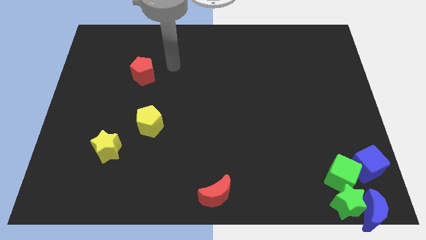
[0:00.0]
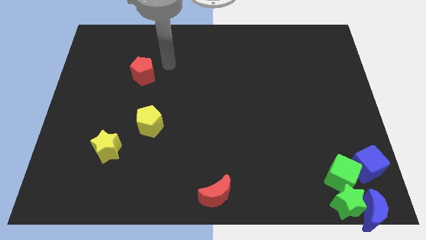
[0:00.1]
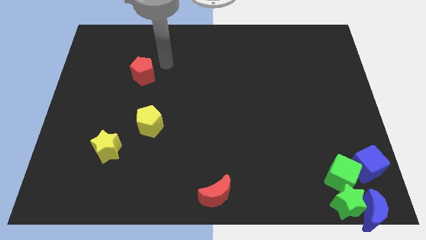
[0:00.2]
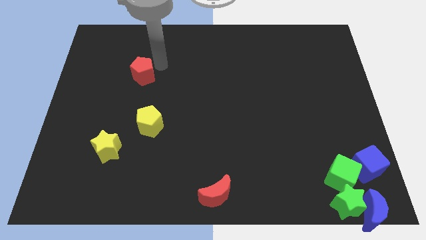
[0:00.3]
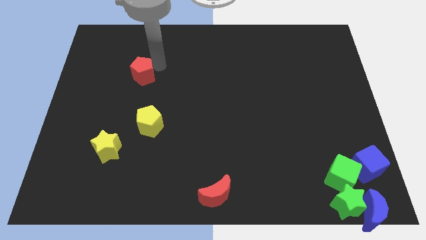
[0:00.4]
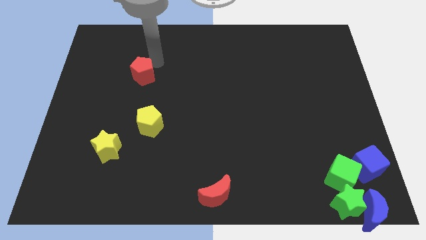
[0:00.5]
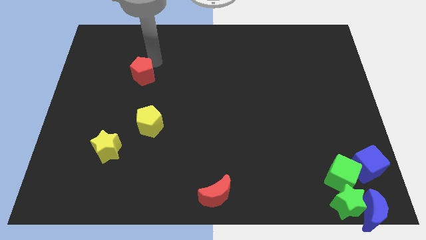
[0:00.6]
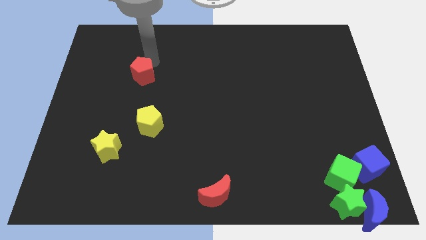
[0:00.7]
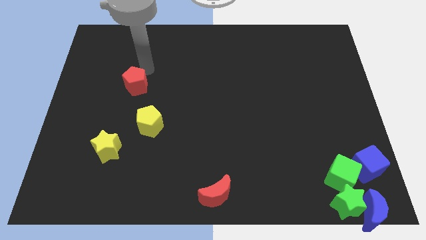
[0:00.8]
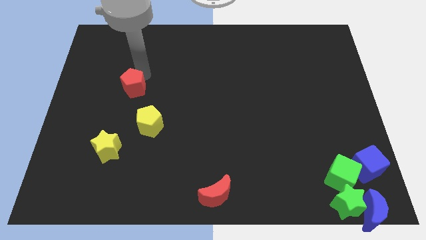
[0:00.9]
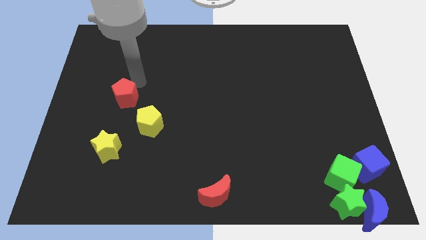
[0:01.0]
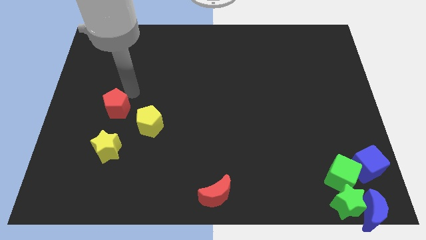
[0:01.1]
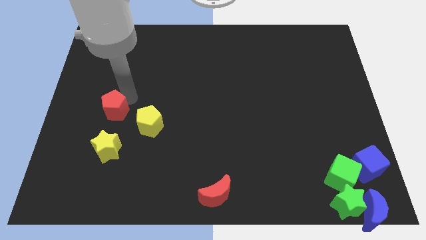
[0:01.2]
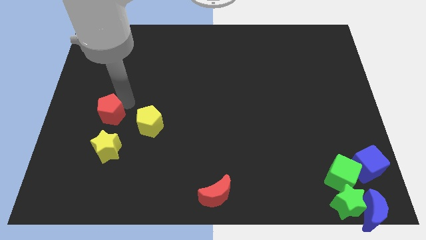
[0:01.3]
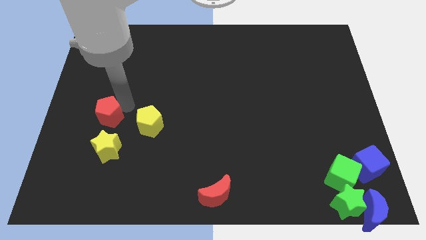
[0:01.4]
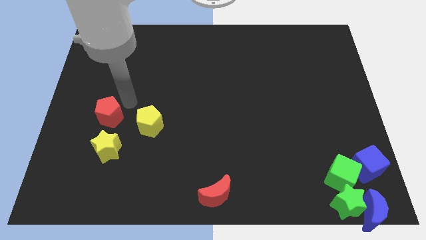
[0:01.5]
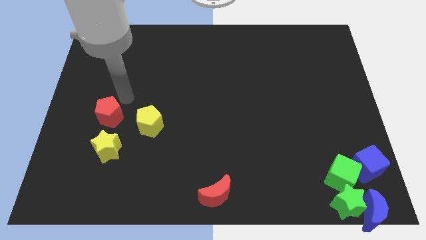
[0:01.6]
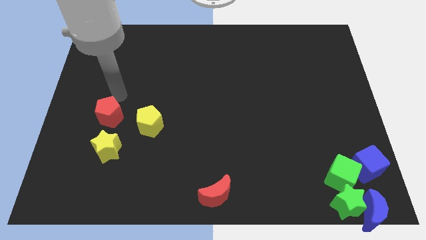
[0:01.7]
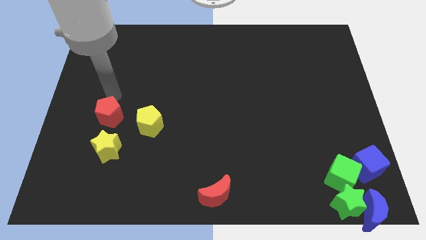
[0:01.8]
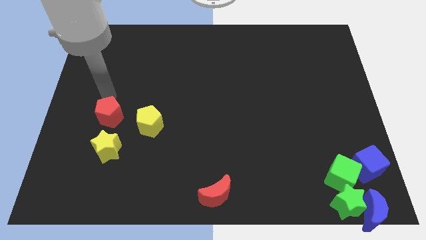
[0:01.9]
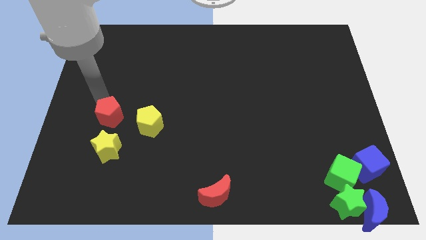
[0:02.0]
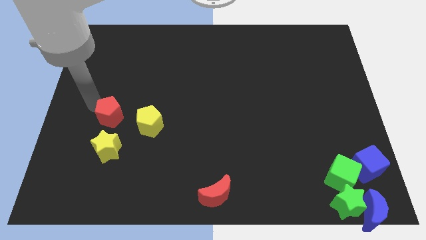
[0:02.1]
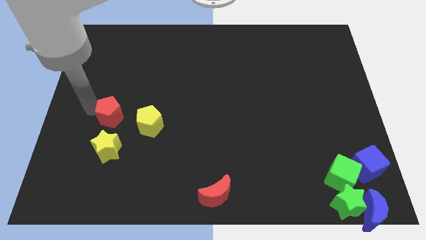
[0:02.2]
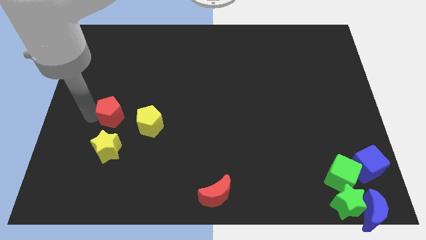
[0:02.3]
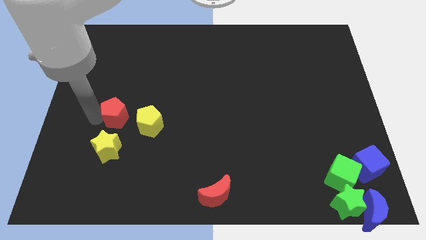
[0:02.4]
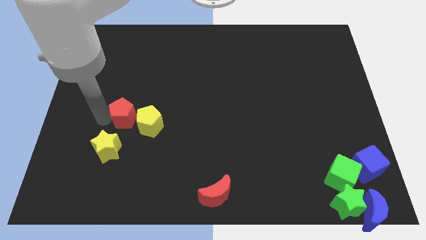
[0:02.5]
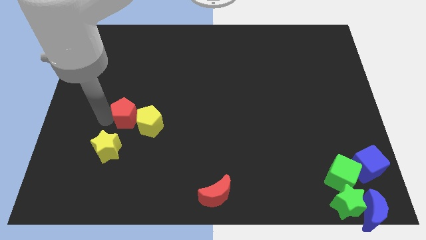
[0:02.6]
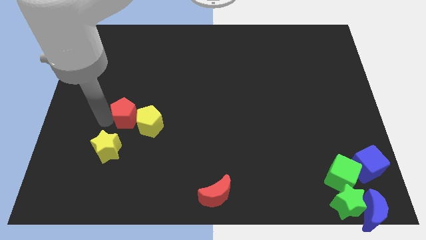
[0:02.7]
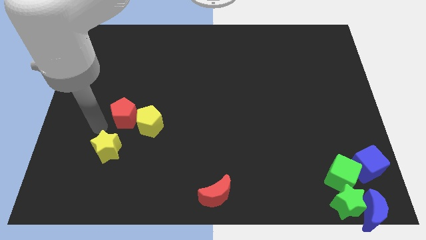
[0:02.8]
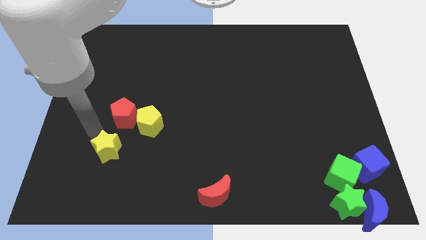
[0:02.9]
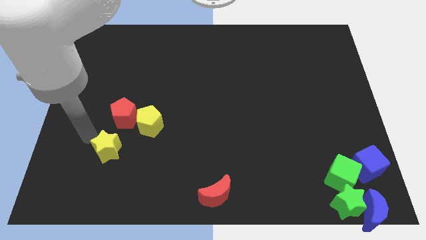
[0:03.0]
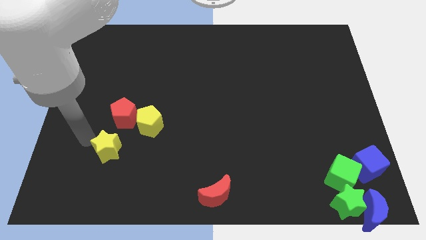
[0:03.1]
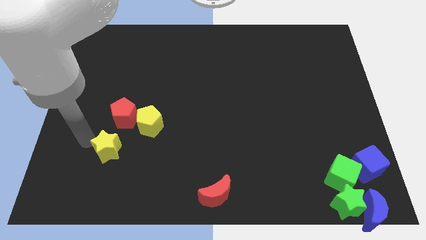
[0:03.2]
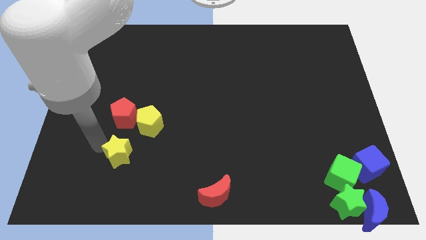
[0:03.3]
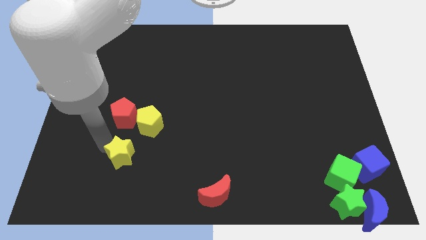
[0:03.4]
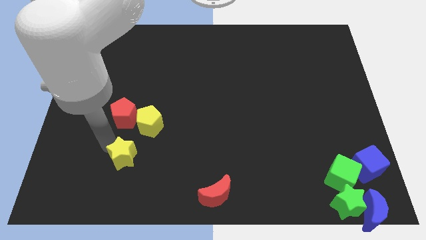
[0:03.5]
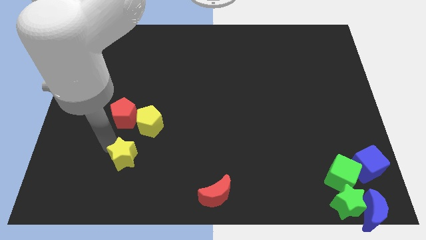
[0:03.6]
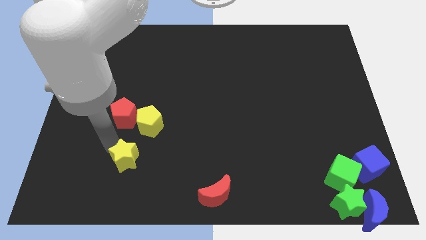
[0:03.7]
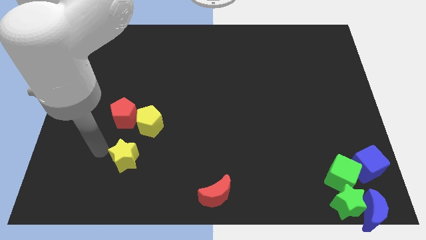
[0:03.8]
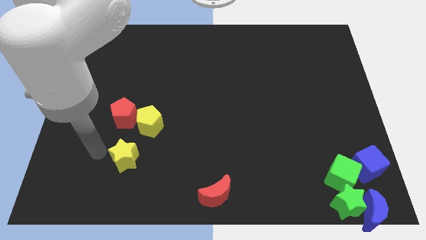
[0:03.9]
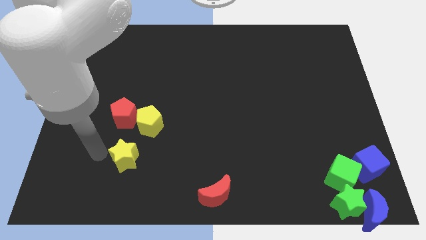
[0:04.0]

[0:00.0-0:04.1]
adjust the red pentagon and the yellow star to form a triangle

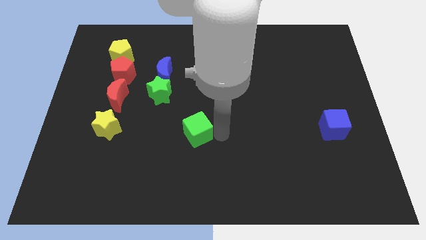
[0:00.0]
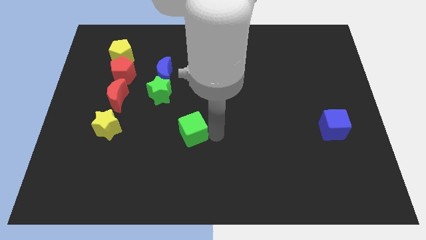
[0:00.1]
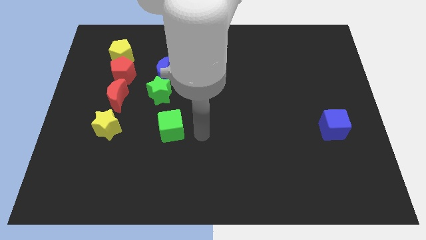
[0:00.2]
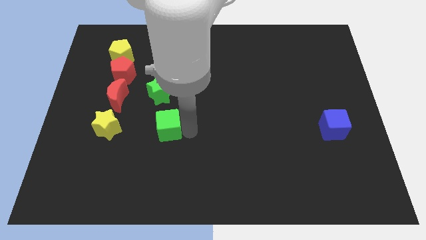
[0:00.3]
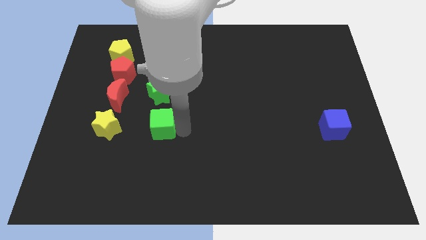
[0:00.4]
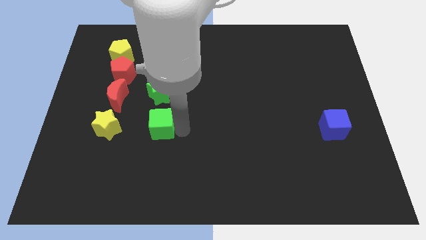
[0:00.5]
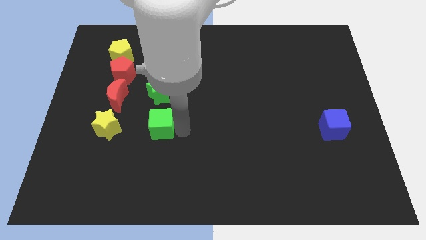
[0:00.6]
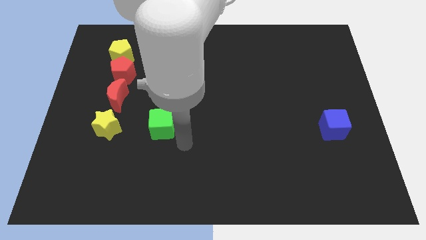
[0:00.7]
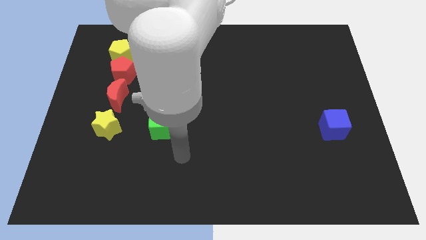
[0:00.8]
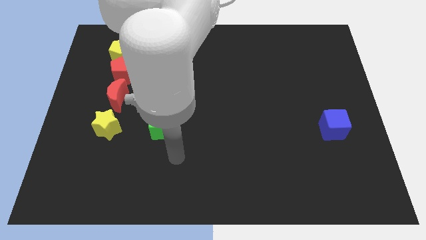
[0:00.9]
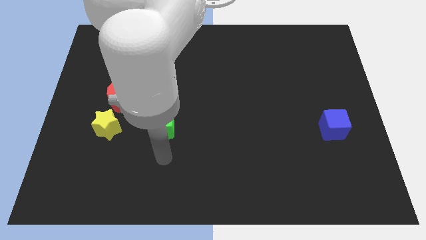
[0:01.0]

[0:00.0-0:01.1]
place the green cube below the green star

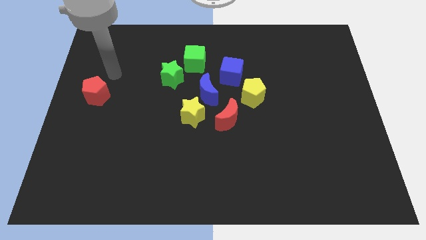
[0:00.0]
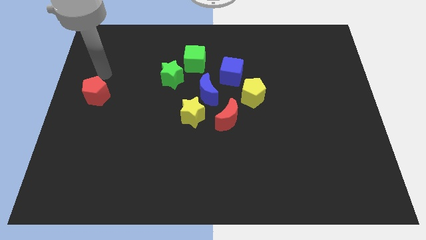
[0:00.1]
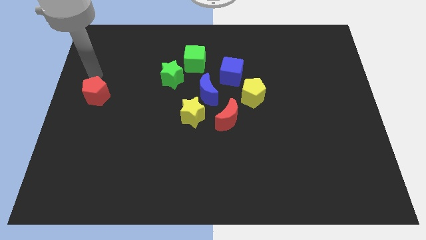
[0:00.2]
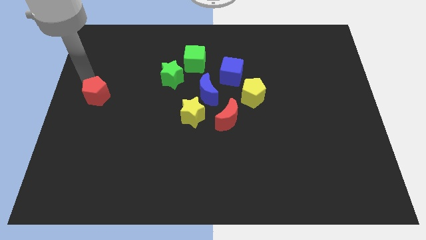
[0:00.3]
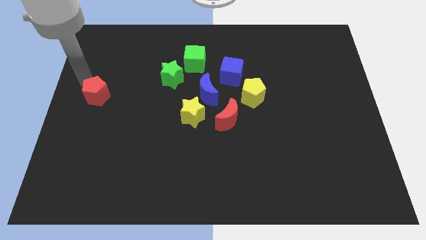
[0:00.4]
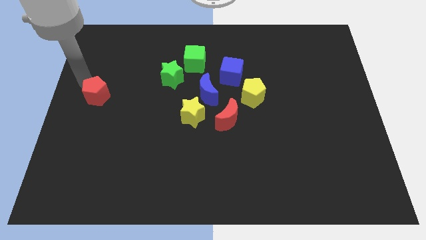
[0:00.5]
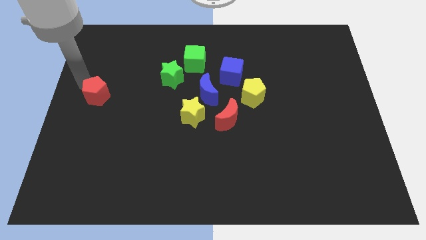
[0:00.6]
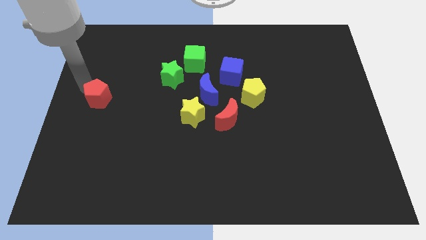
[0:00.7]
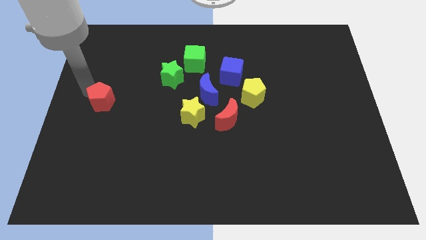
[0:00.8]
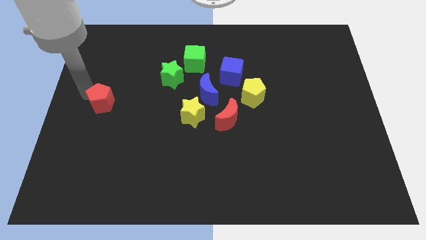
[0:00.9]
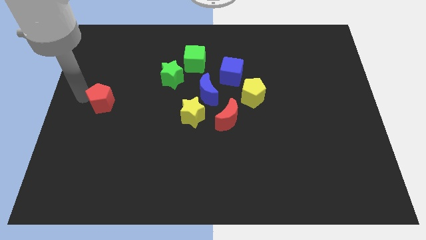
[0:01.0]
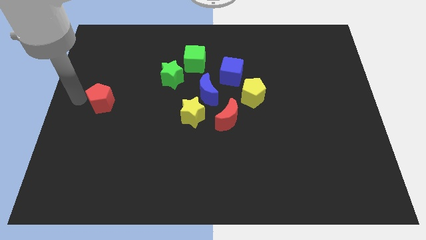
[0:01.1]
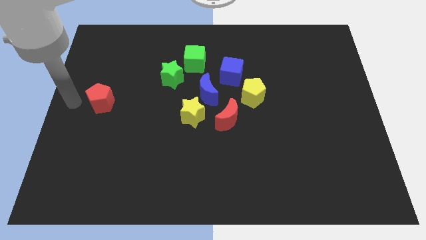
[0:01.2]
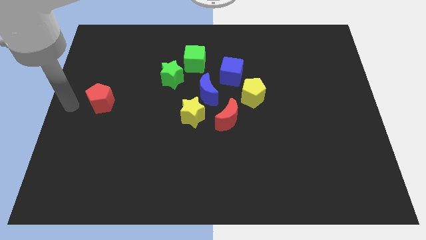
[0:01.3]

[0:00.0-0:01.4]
slightly move the red pentagon down

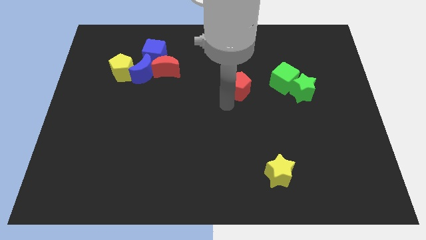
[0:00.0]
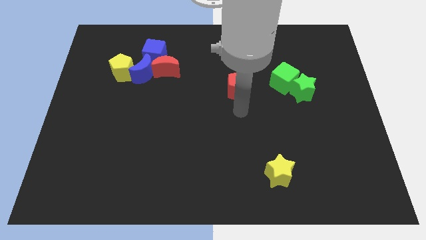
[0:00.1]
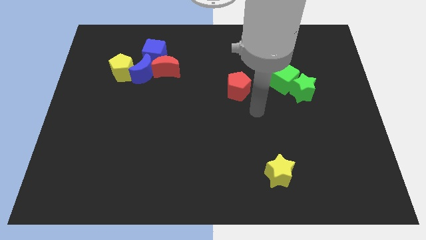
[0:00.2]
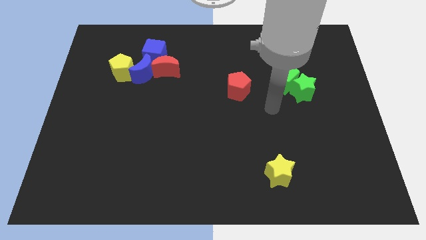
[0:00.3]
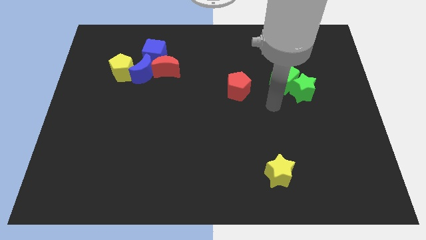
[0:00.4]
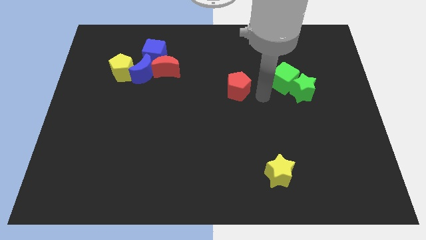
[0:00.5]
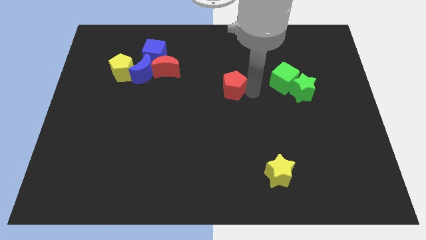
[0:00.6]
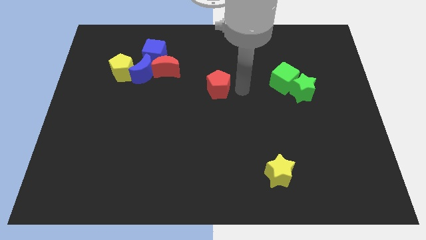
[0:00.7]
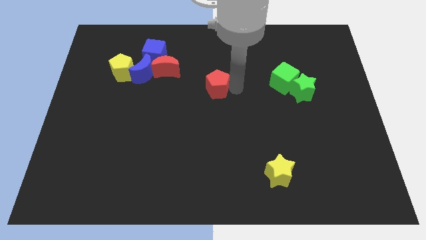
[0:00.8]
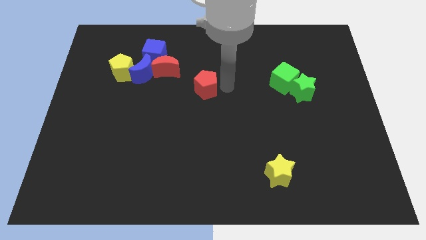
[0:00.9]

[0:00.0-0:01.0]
slightly push the red pentagon to the center of the board

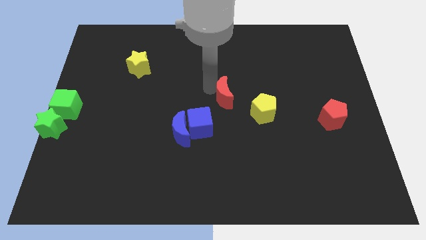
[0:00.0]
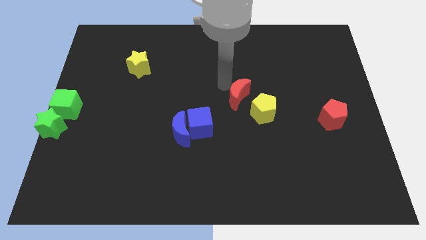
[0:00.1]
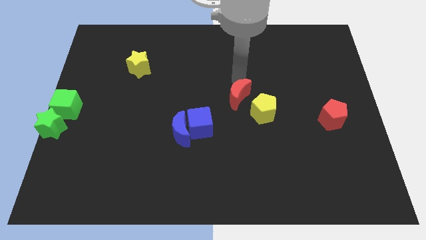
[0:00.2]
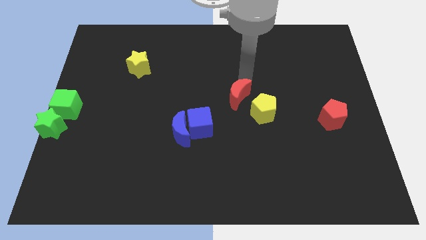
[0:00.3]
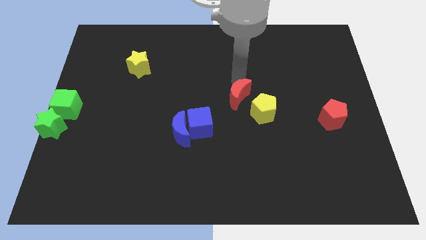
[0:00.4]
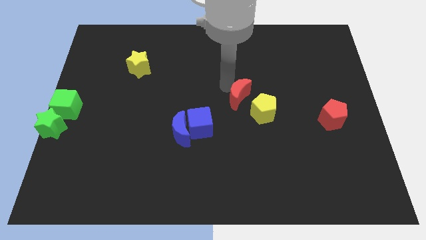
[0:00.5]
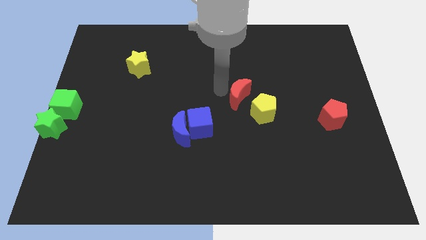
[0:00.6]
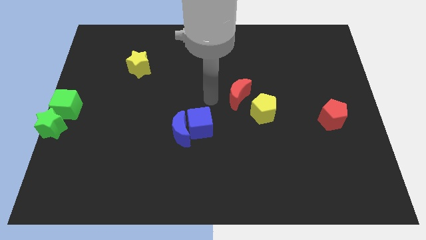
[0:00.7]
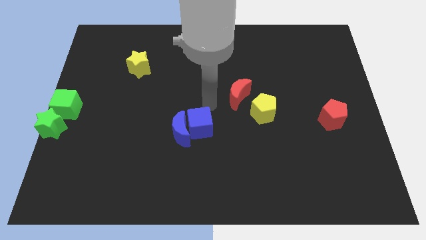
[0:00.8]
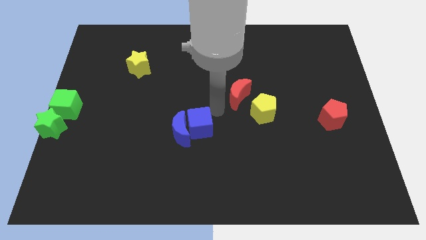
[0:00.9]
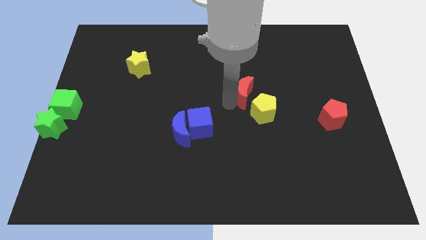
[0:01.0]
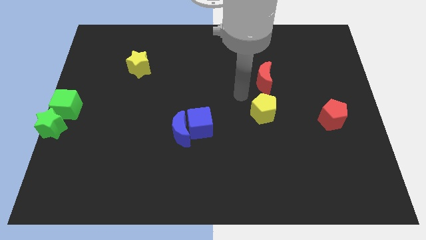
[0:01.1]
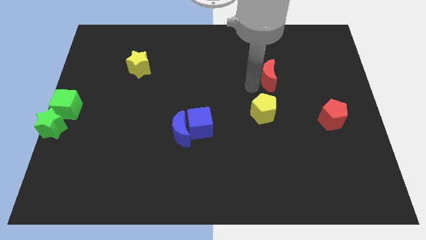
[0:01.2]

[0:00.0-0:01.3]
put the red crescent above the yellow pentagon
